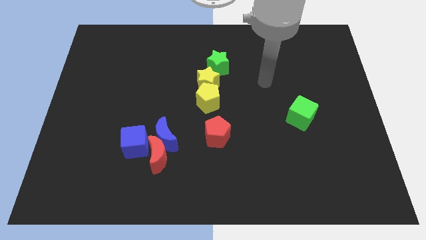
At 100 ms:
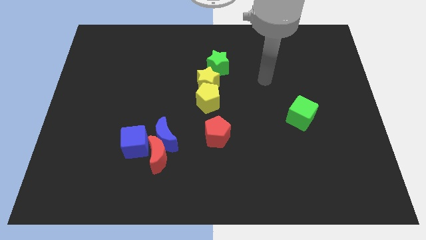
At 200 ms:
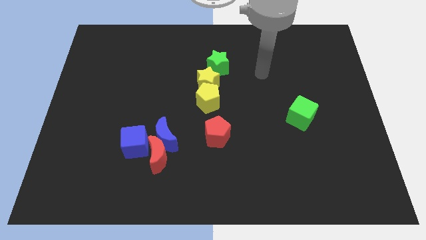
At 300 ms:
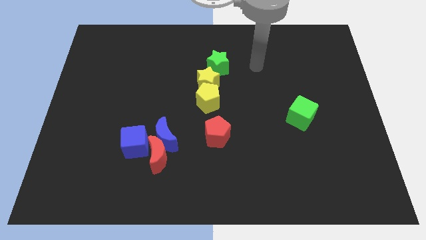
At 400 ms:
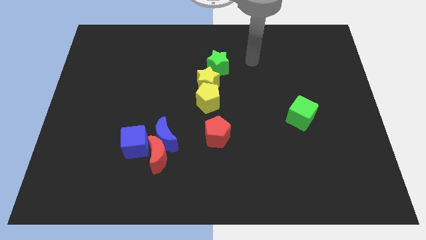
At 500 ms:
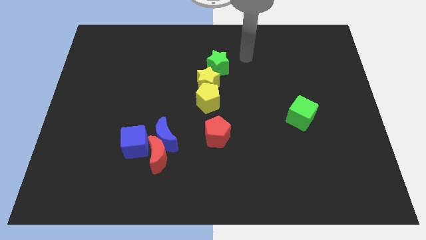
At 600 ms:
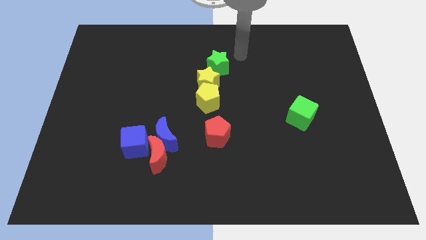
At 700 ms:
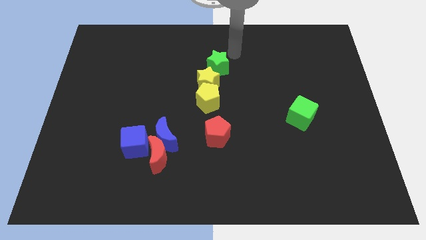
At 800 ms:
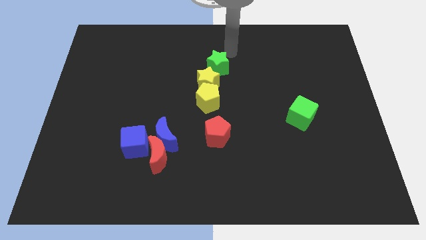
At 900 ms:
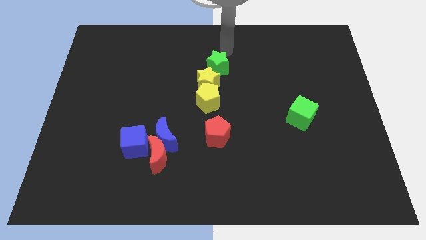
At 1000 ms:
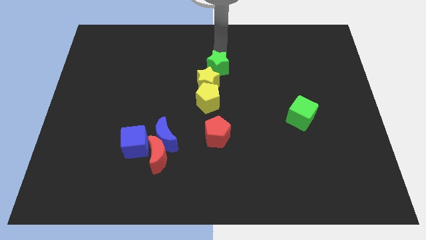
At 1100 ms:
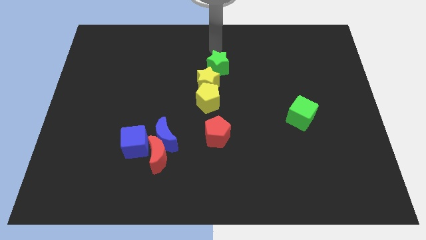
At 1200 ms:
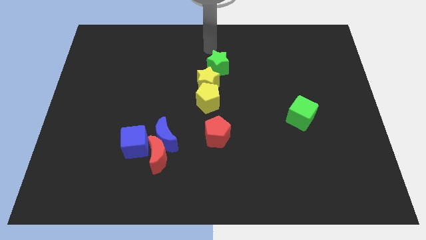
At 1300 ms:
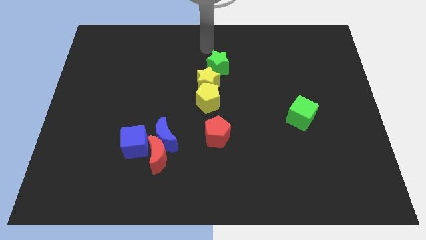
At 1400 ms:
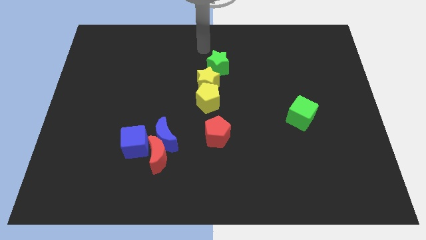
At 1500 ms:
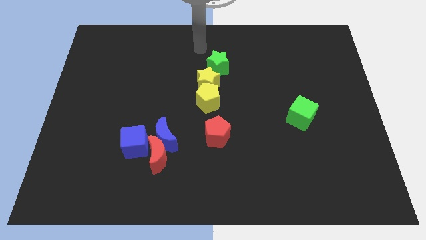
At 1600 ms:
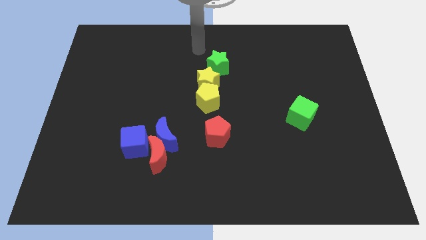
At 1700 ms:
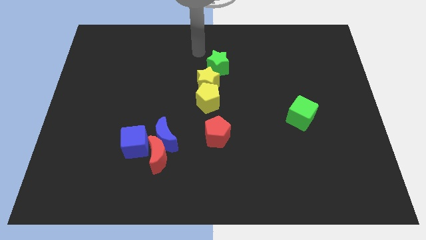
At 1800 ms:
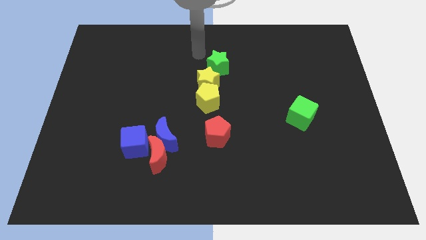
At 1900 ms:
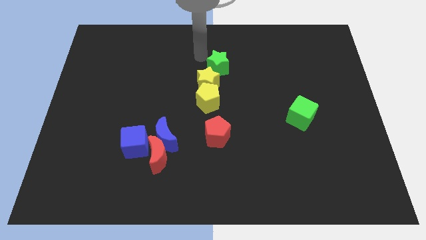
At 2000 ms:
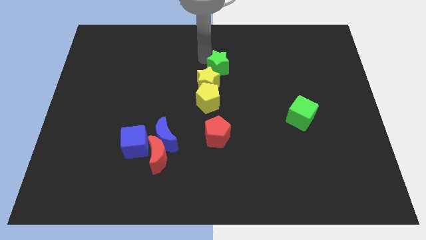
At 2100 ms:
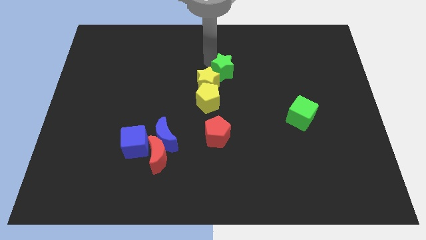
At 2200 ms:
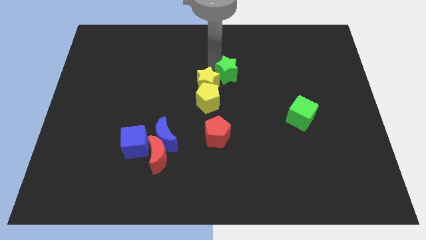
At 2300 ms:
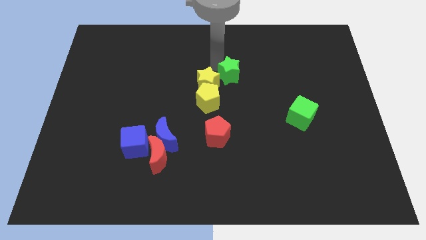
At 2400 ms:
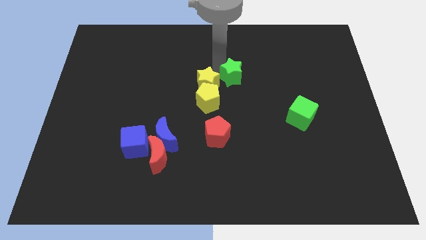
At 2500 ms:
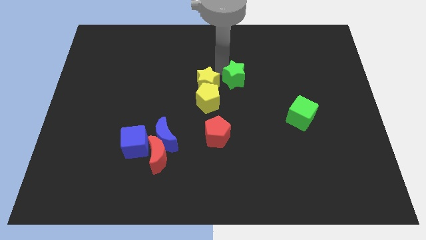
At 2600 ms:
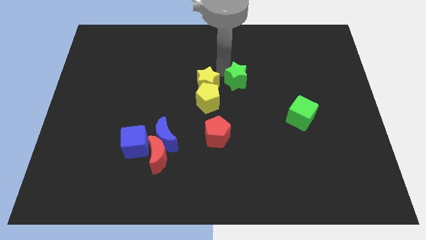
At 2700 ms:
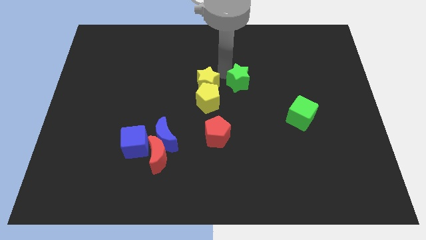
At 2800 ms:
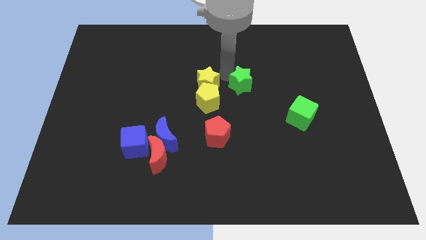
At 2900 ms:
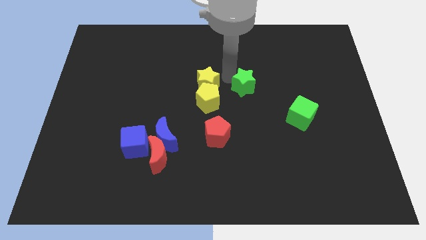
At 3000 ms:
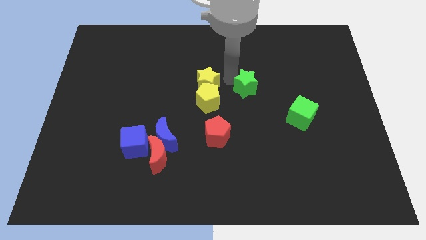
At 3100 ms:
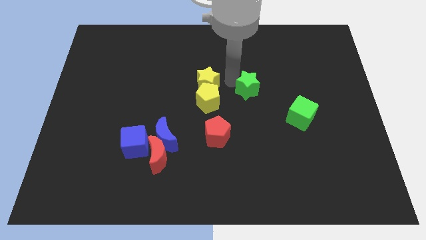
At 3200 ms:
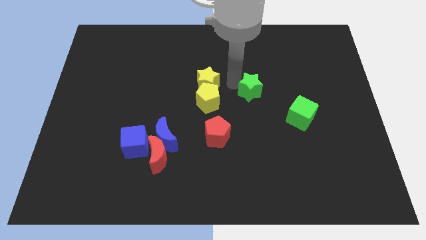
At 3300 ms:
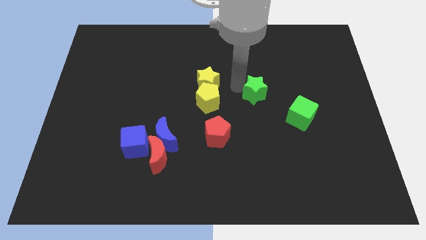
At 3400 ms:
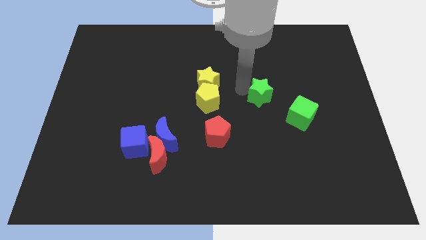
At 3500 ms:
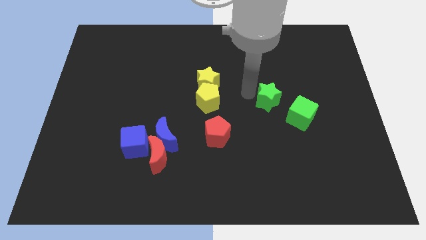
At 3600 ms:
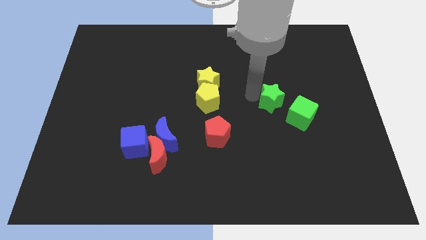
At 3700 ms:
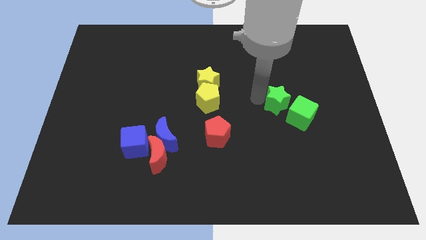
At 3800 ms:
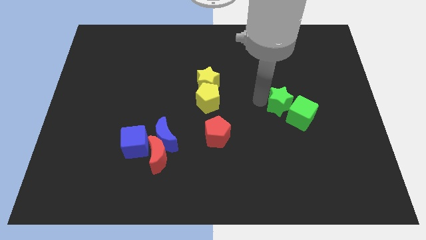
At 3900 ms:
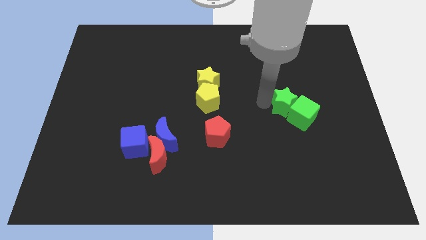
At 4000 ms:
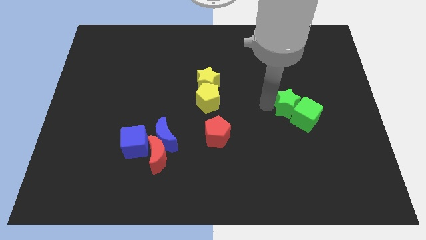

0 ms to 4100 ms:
move the green star into the green cube

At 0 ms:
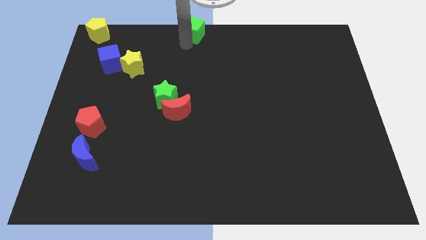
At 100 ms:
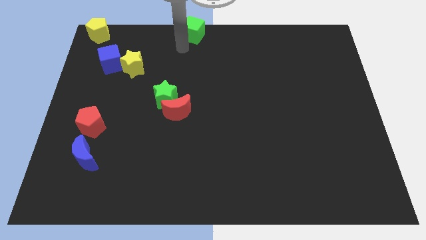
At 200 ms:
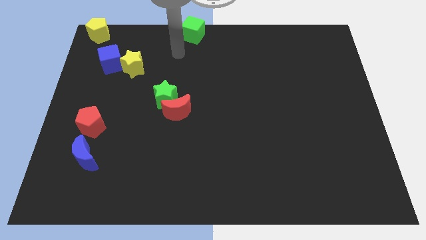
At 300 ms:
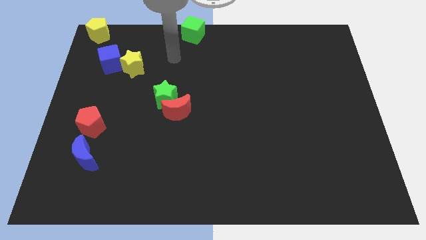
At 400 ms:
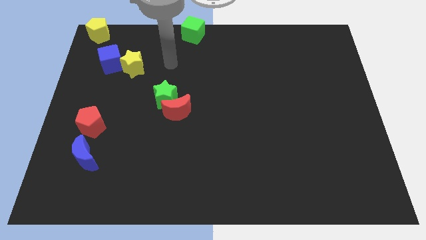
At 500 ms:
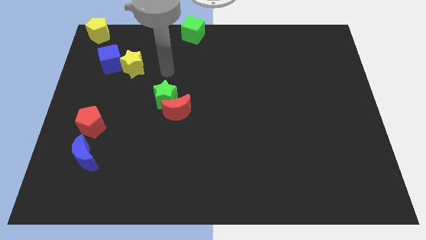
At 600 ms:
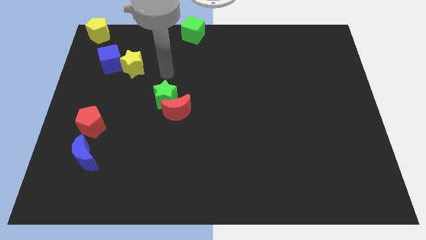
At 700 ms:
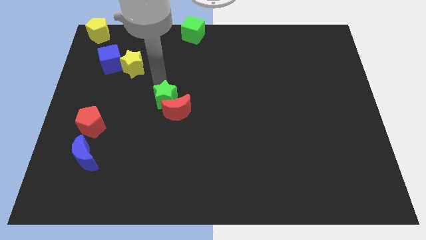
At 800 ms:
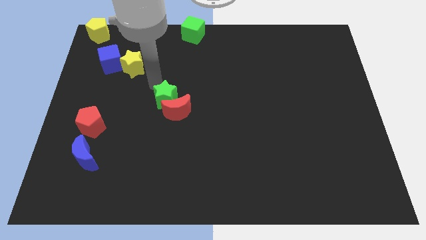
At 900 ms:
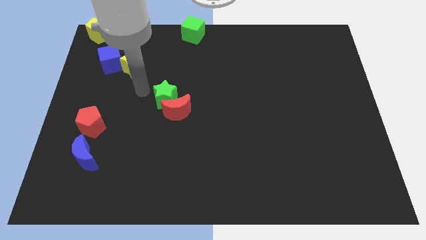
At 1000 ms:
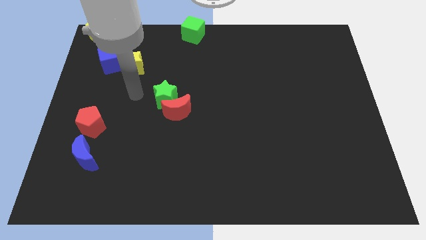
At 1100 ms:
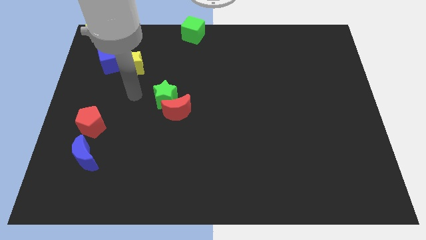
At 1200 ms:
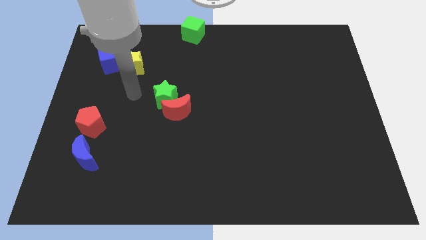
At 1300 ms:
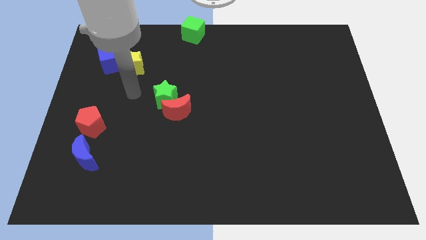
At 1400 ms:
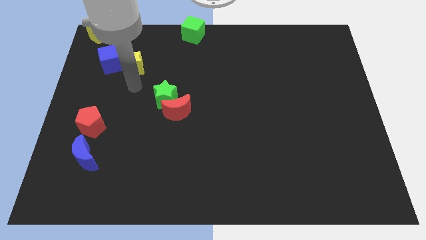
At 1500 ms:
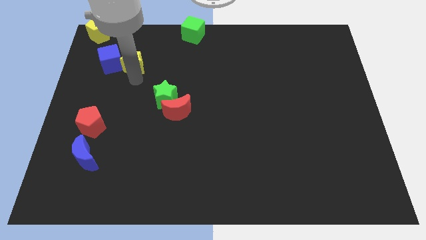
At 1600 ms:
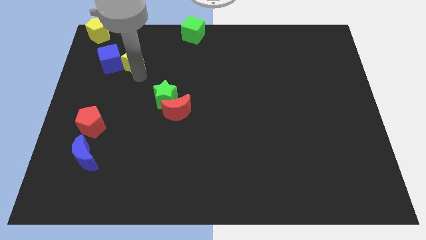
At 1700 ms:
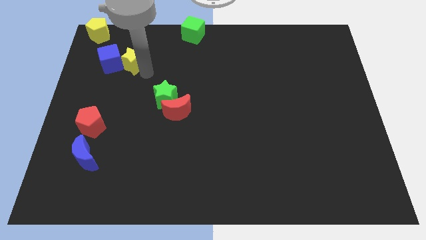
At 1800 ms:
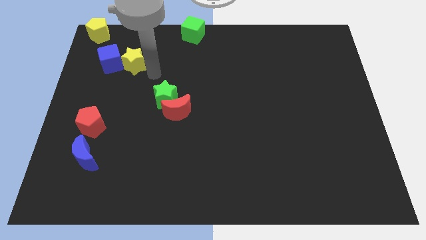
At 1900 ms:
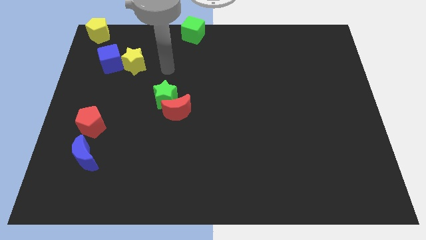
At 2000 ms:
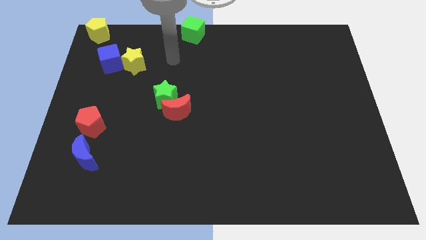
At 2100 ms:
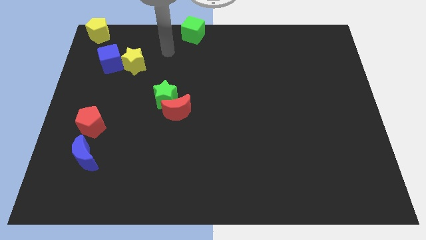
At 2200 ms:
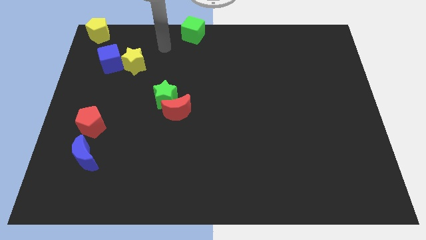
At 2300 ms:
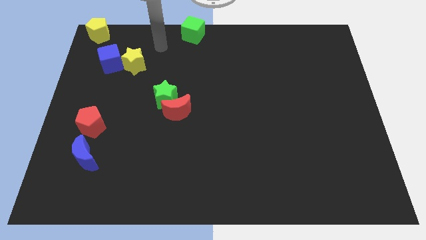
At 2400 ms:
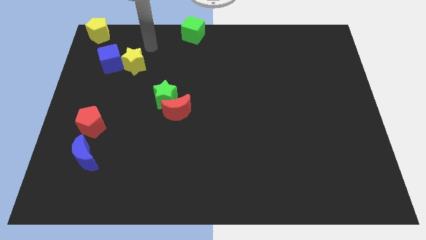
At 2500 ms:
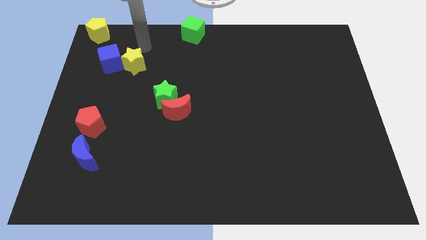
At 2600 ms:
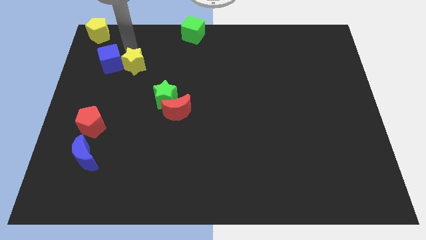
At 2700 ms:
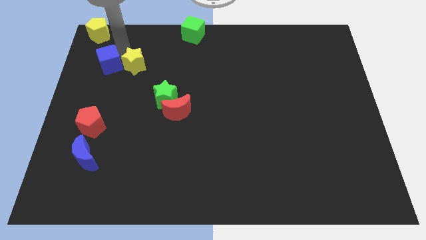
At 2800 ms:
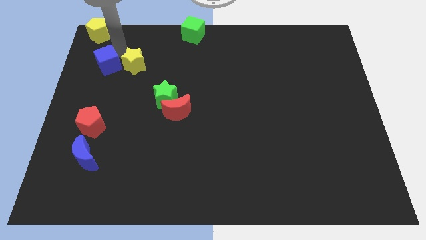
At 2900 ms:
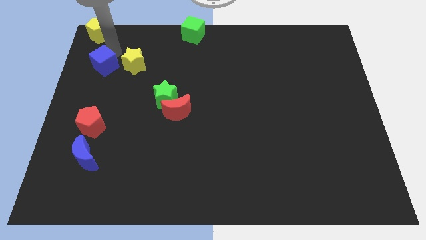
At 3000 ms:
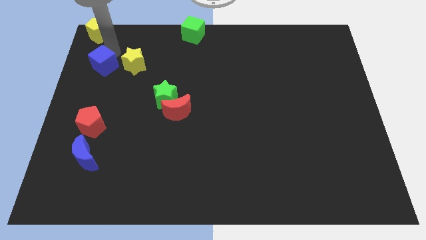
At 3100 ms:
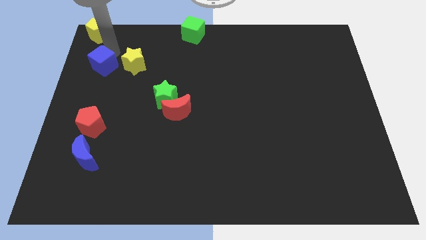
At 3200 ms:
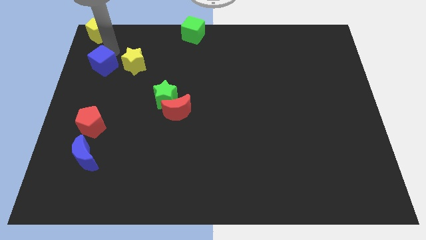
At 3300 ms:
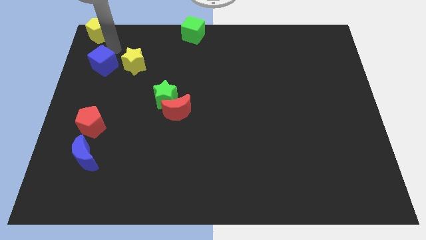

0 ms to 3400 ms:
move your arm away from the green cube

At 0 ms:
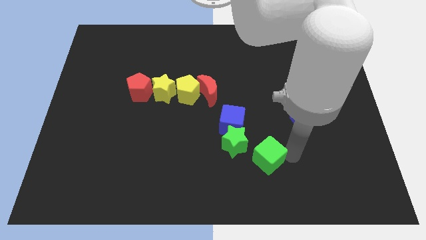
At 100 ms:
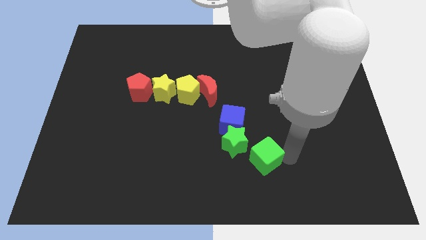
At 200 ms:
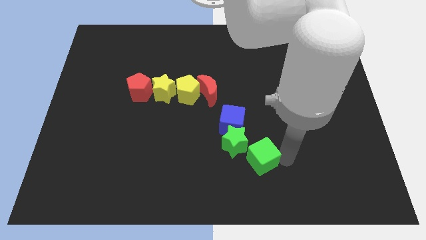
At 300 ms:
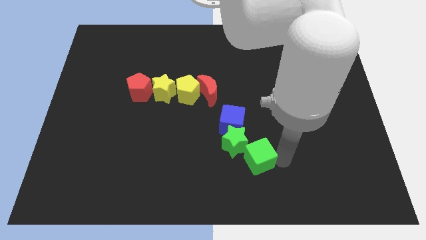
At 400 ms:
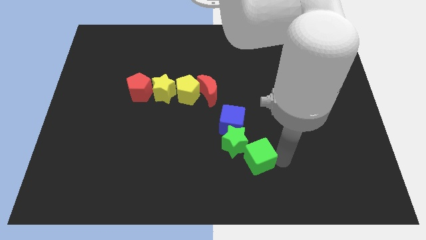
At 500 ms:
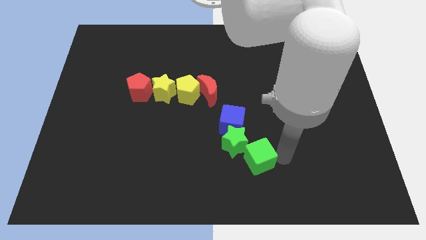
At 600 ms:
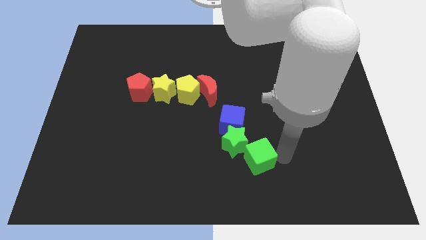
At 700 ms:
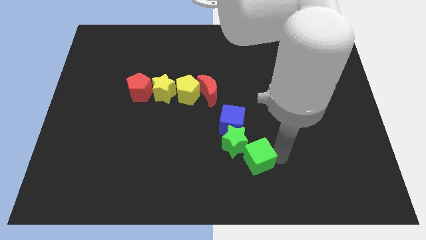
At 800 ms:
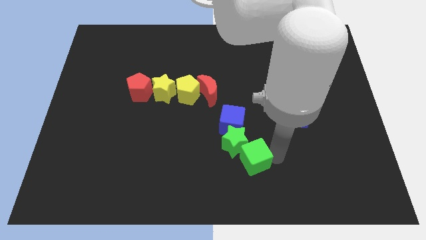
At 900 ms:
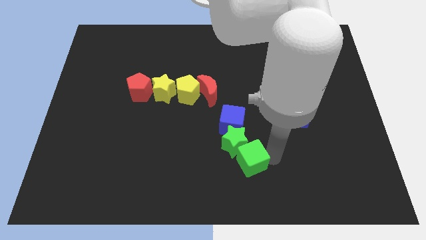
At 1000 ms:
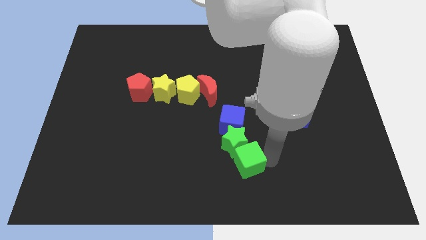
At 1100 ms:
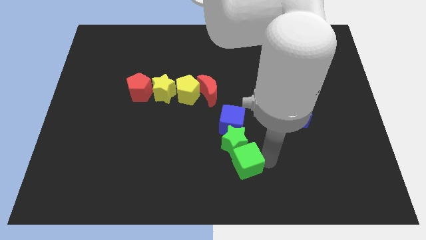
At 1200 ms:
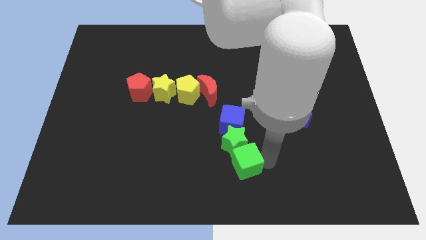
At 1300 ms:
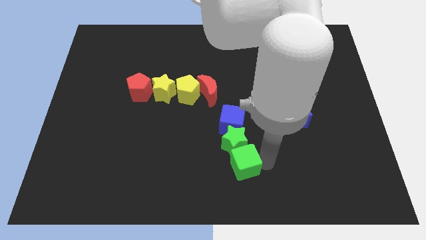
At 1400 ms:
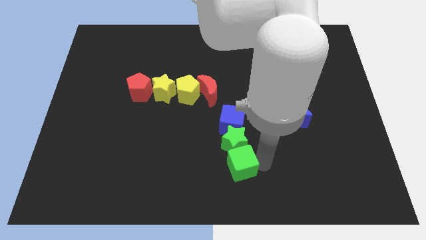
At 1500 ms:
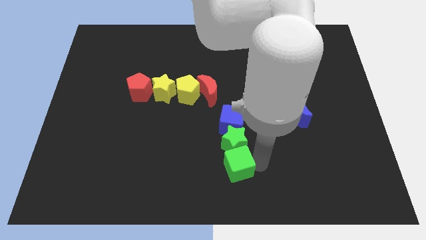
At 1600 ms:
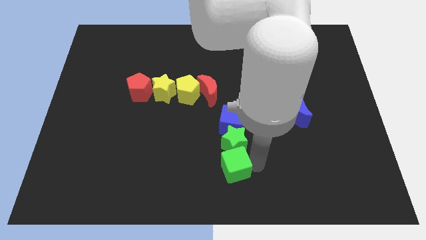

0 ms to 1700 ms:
put the green cube to the bottom side of the green star
